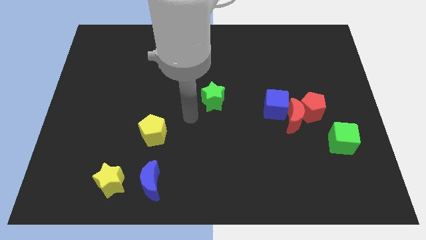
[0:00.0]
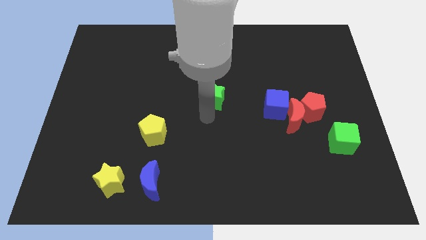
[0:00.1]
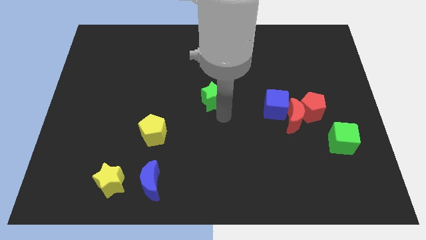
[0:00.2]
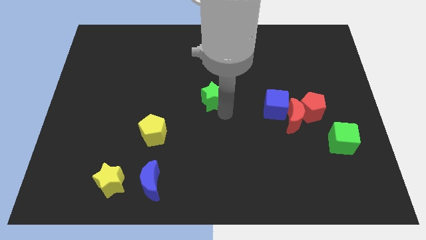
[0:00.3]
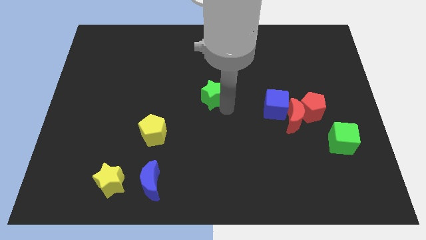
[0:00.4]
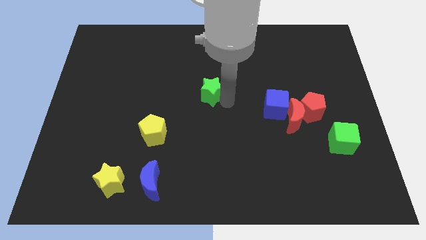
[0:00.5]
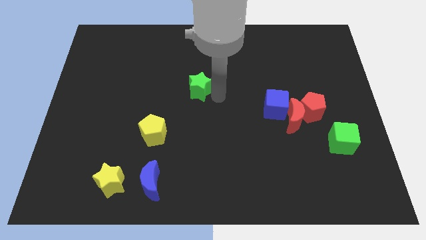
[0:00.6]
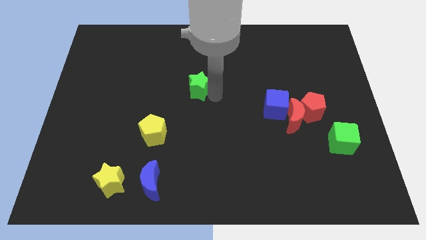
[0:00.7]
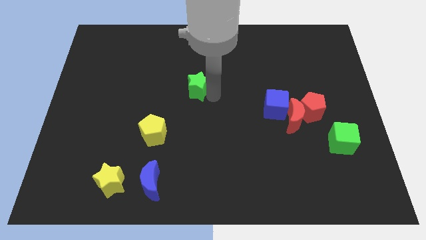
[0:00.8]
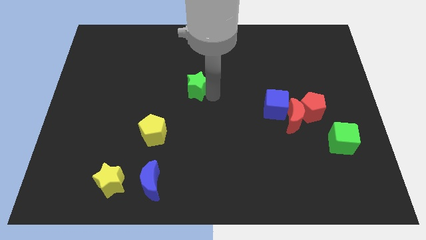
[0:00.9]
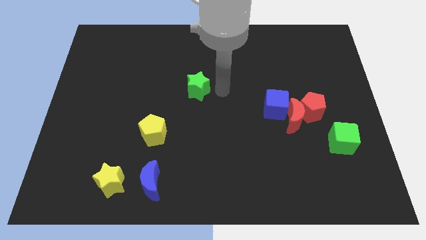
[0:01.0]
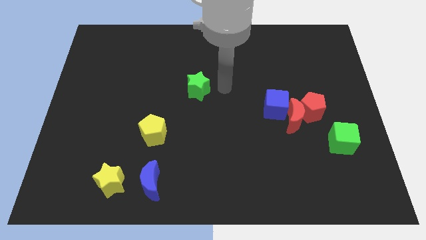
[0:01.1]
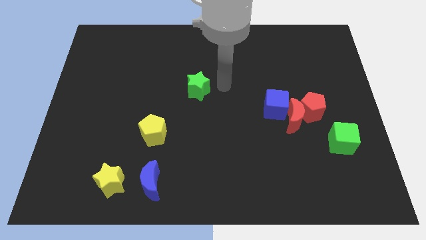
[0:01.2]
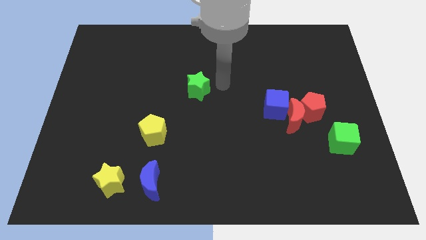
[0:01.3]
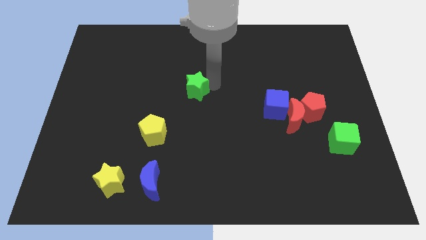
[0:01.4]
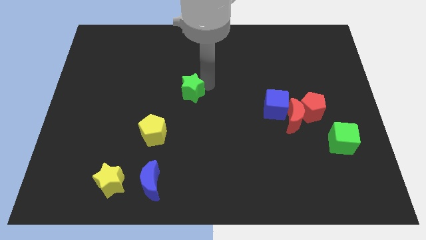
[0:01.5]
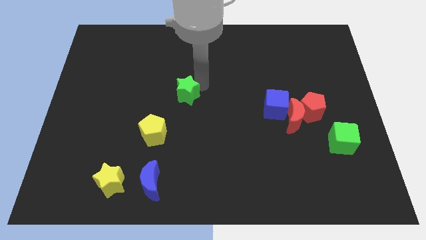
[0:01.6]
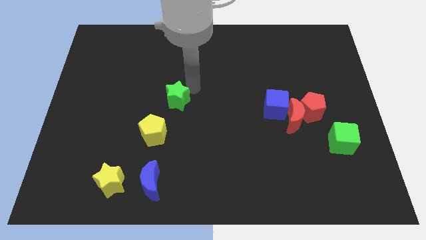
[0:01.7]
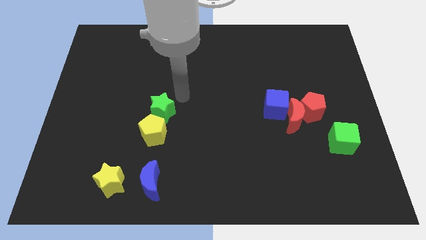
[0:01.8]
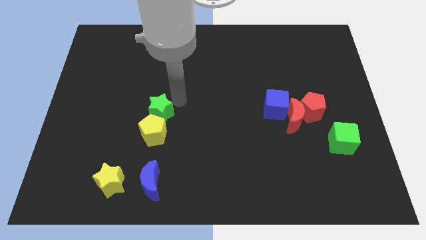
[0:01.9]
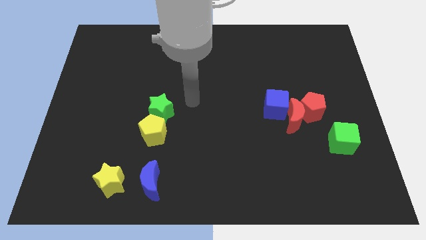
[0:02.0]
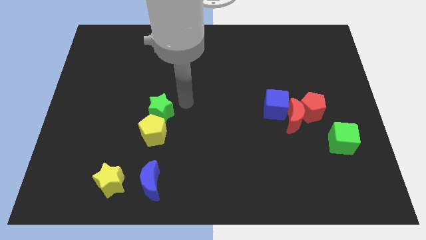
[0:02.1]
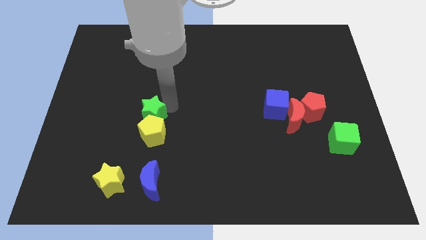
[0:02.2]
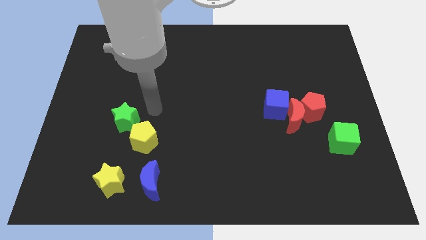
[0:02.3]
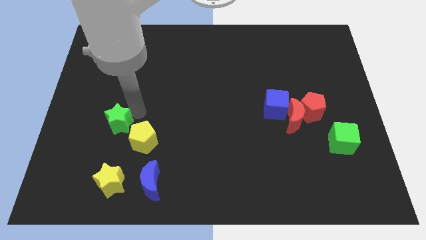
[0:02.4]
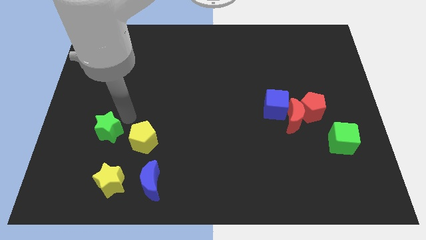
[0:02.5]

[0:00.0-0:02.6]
move the green star to the vertical top side of the yellow star

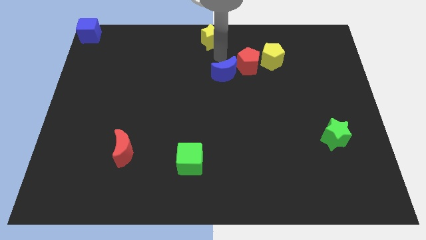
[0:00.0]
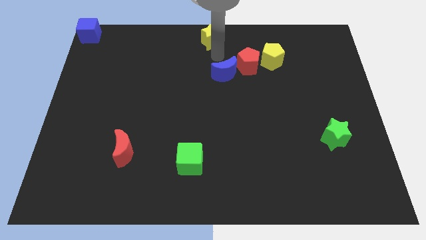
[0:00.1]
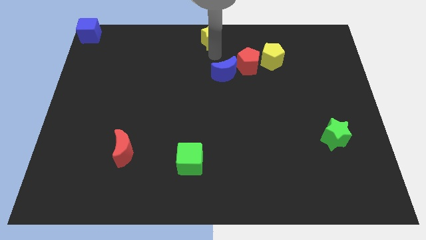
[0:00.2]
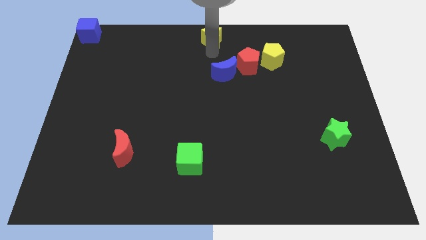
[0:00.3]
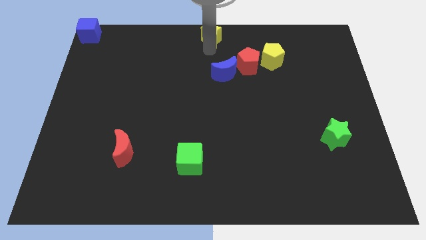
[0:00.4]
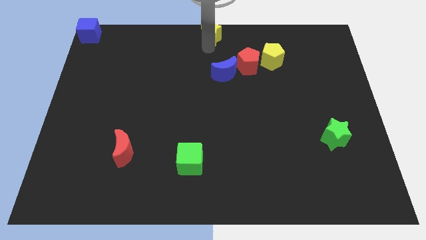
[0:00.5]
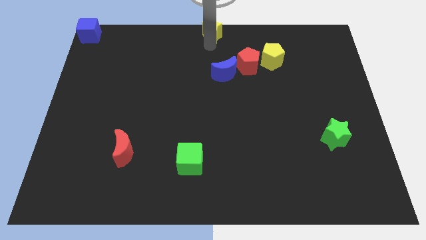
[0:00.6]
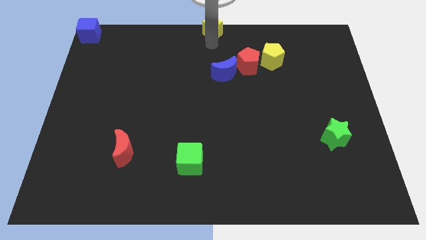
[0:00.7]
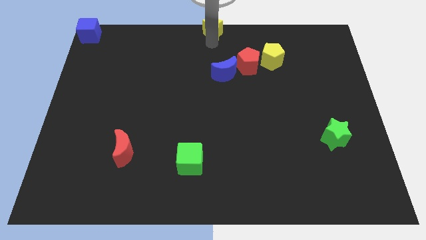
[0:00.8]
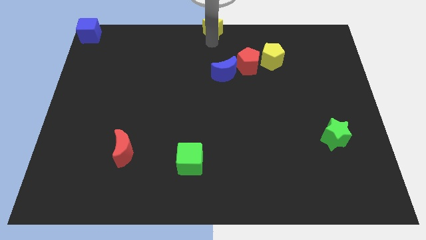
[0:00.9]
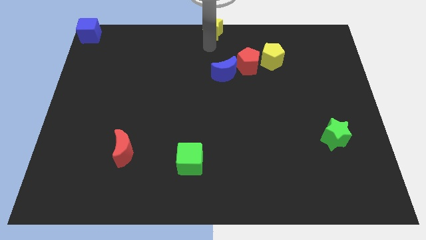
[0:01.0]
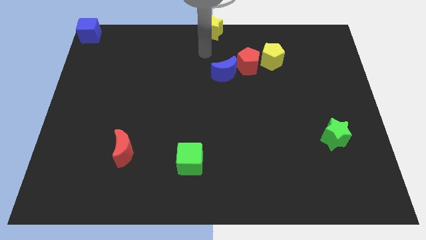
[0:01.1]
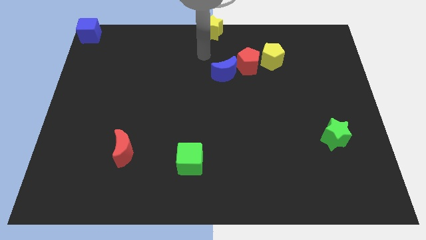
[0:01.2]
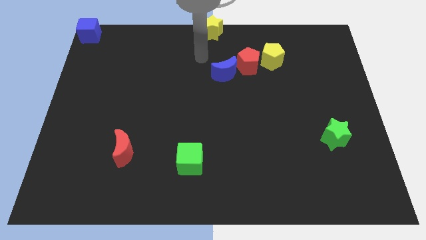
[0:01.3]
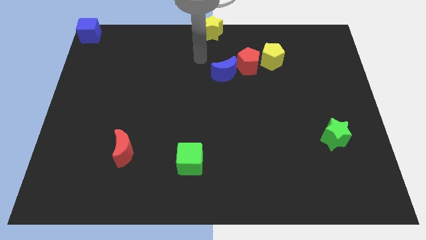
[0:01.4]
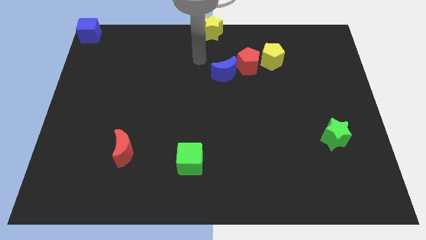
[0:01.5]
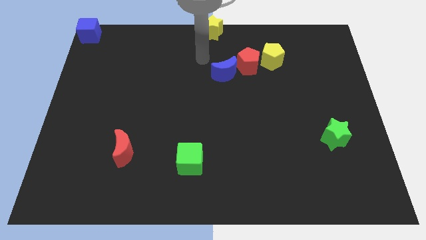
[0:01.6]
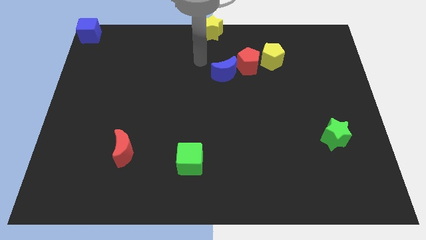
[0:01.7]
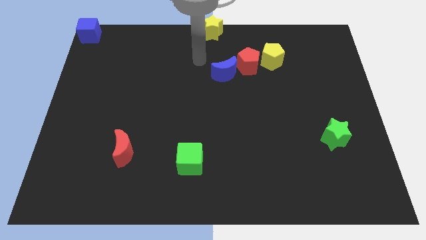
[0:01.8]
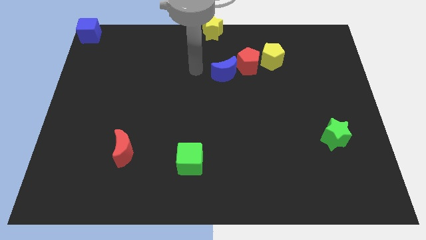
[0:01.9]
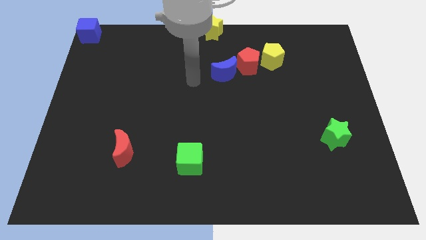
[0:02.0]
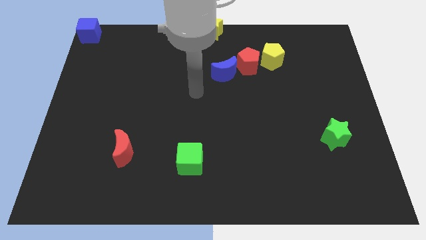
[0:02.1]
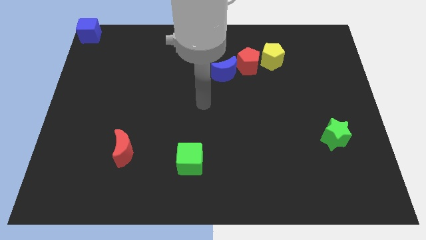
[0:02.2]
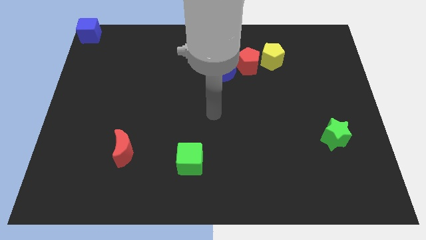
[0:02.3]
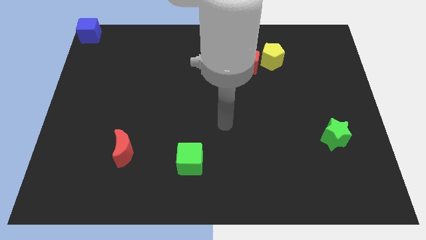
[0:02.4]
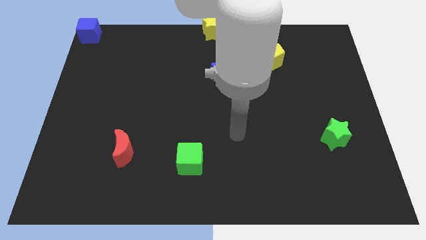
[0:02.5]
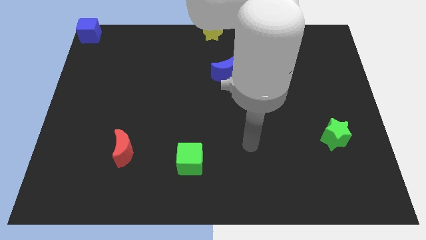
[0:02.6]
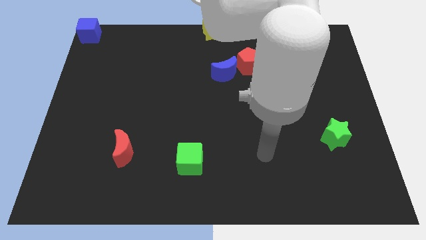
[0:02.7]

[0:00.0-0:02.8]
place yellow star at top center of the board

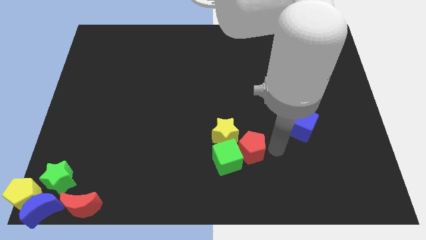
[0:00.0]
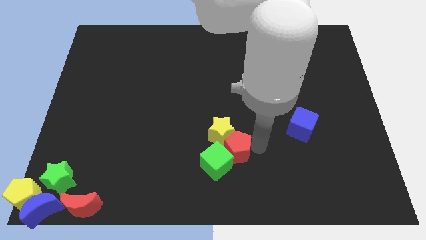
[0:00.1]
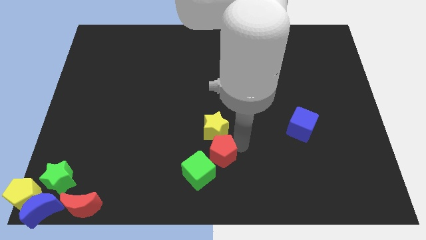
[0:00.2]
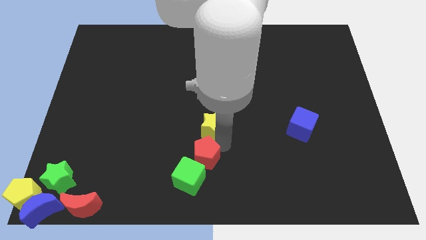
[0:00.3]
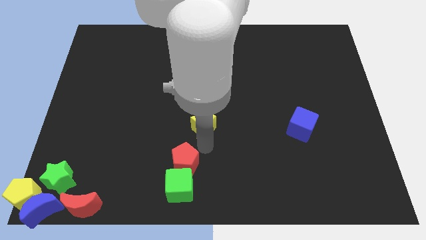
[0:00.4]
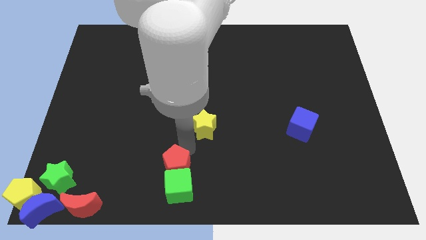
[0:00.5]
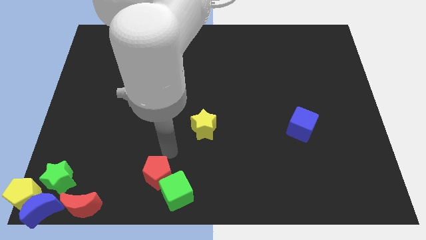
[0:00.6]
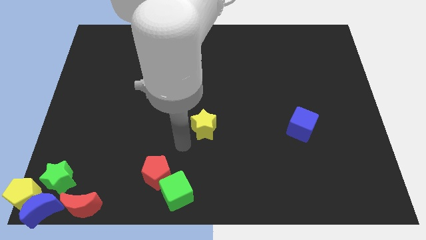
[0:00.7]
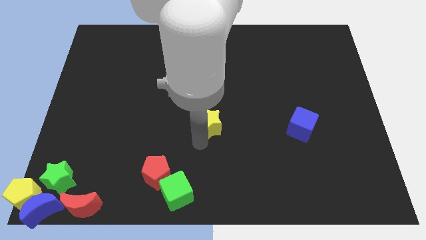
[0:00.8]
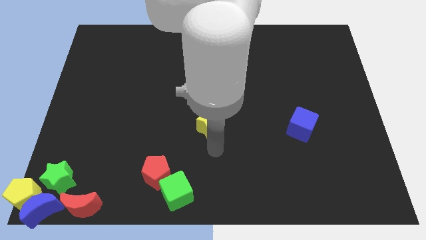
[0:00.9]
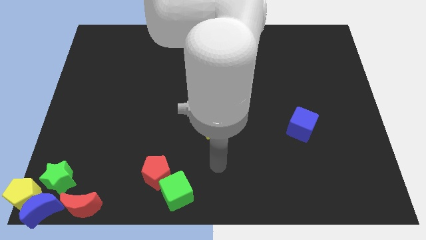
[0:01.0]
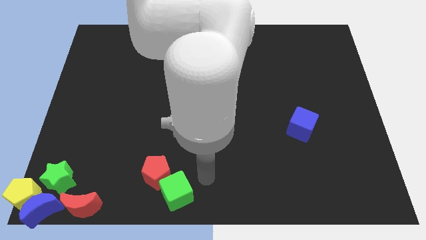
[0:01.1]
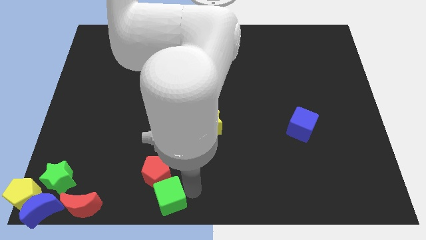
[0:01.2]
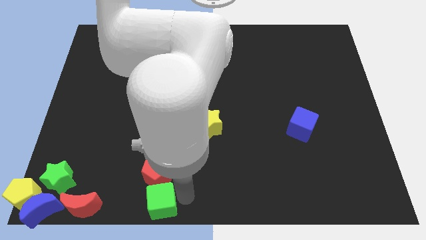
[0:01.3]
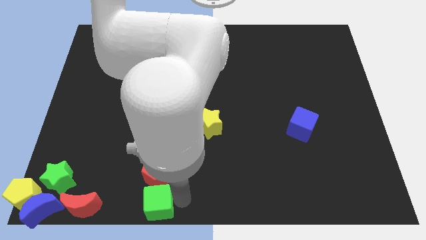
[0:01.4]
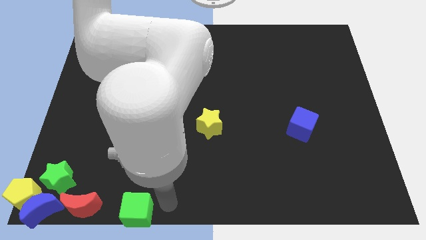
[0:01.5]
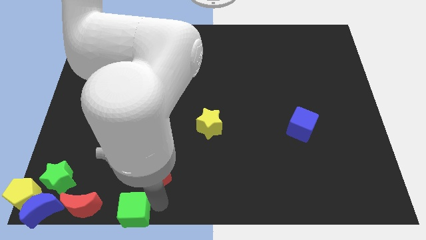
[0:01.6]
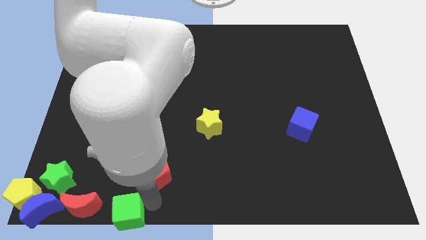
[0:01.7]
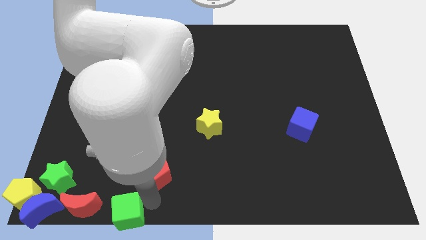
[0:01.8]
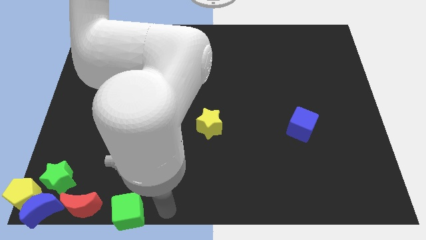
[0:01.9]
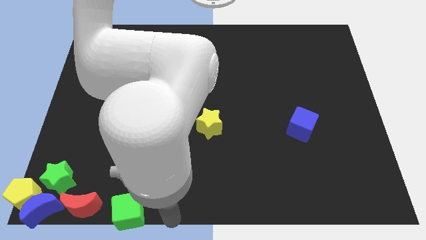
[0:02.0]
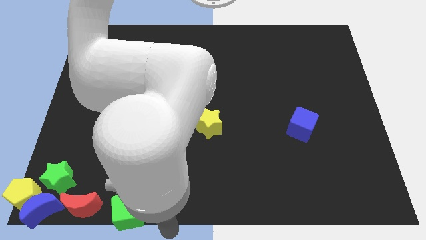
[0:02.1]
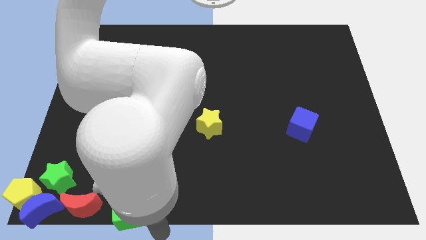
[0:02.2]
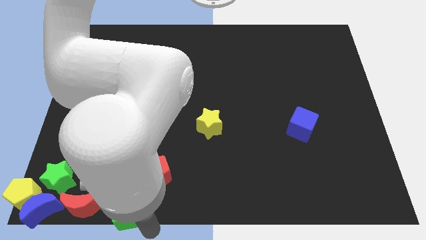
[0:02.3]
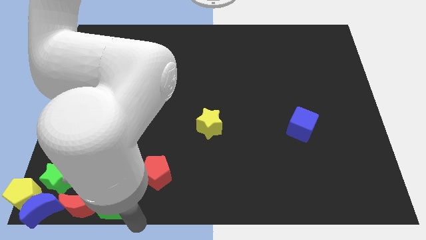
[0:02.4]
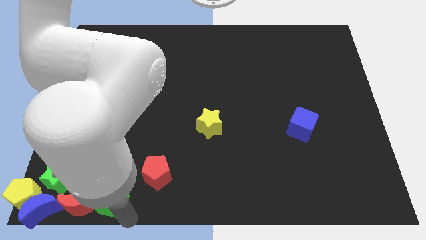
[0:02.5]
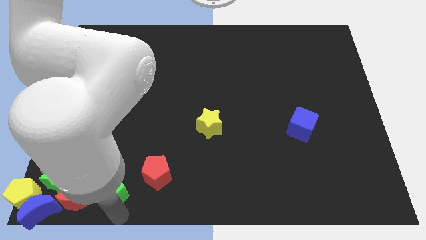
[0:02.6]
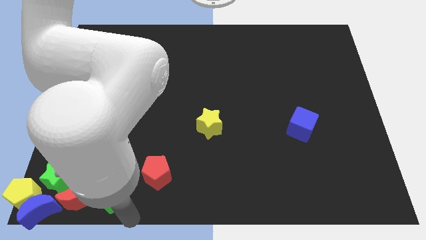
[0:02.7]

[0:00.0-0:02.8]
move the green cube into the right side of the red crescent

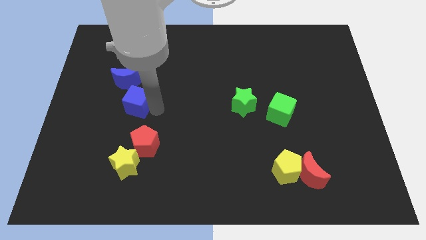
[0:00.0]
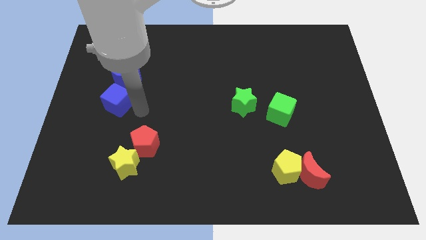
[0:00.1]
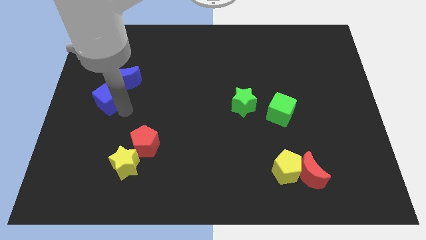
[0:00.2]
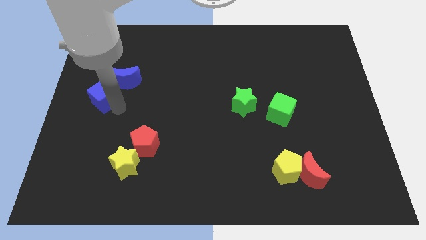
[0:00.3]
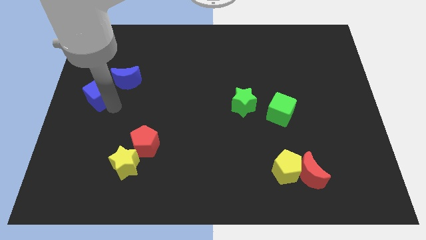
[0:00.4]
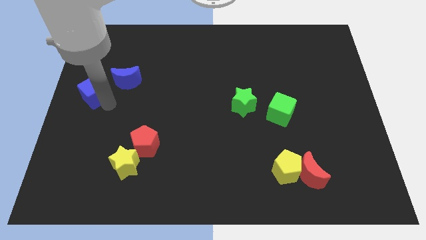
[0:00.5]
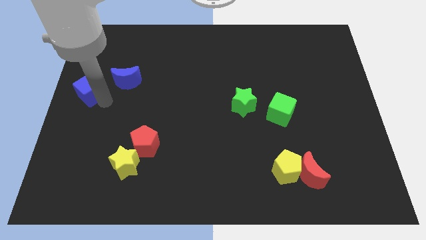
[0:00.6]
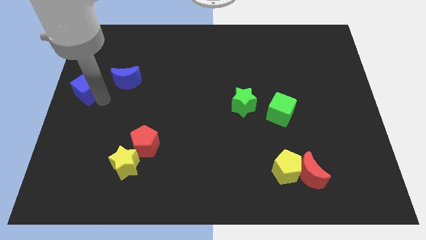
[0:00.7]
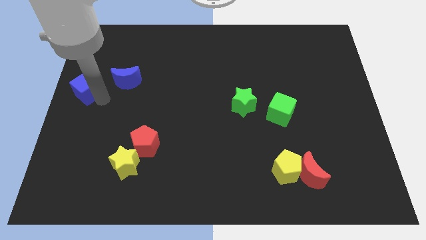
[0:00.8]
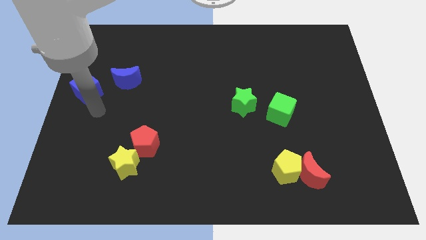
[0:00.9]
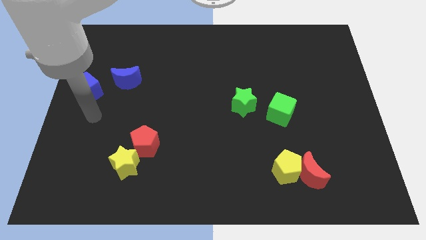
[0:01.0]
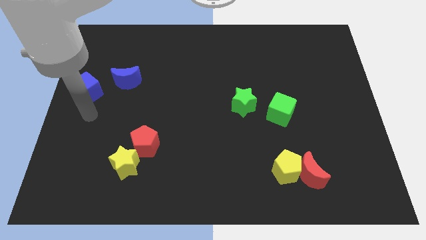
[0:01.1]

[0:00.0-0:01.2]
move the blue cube top left to the yellow star
